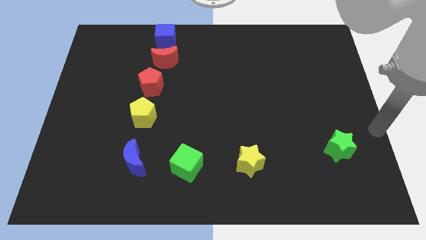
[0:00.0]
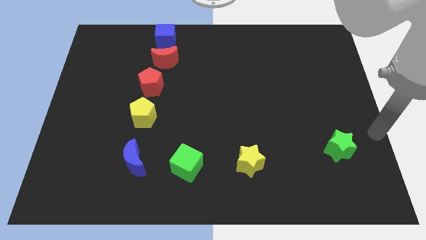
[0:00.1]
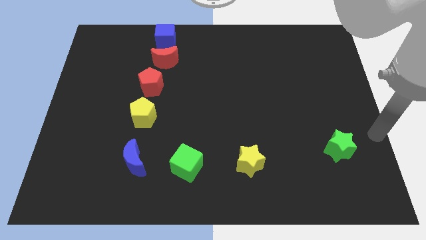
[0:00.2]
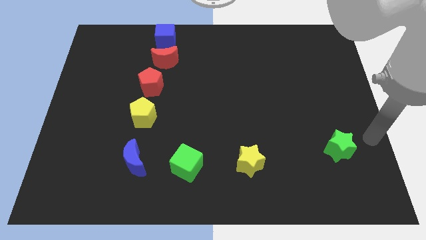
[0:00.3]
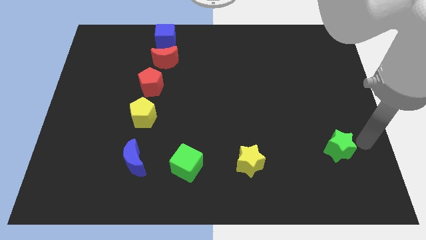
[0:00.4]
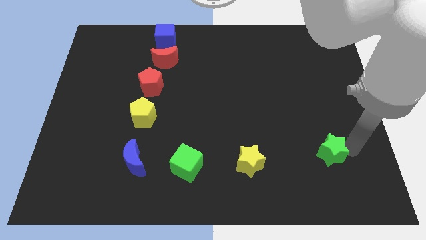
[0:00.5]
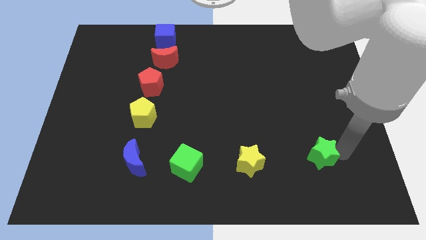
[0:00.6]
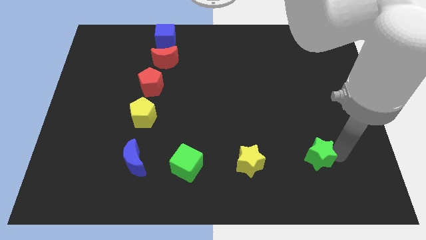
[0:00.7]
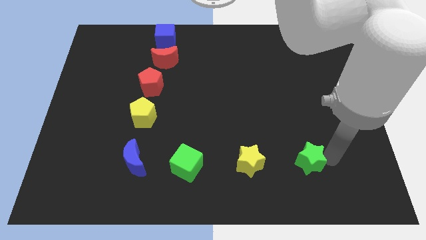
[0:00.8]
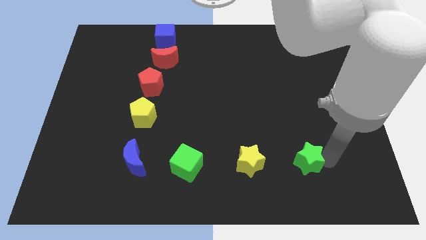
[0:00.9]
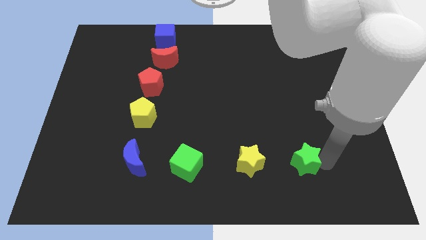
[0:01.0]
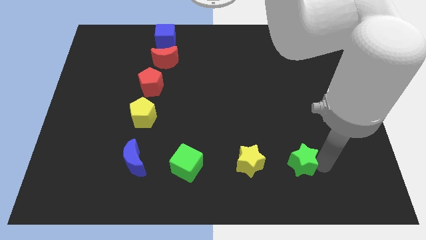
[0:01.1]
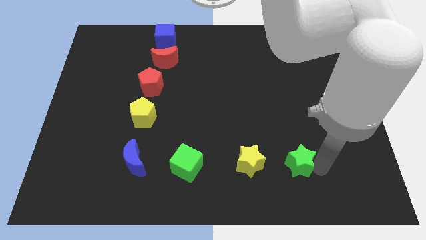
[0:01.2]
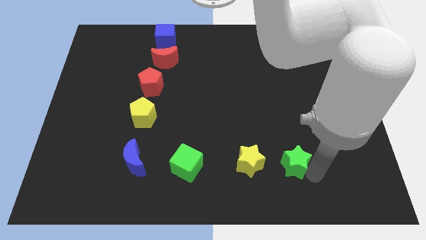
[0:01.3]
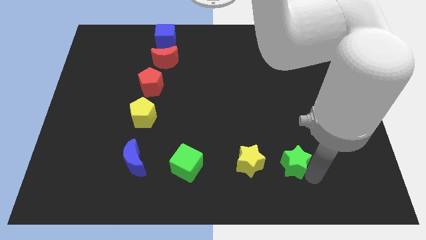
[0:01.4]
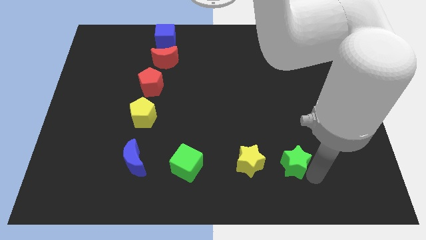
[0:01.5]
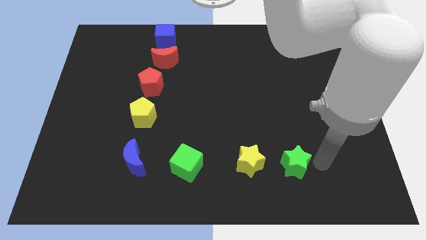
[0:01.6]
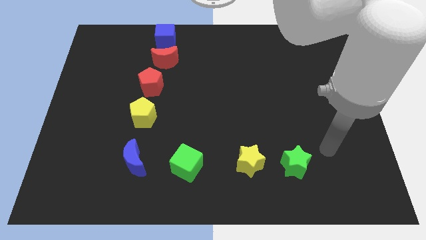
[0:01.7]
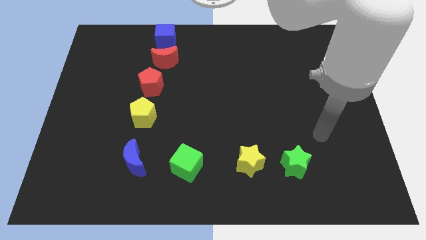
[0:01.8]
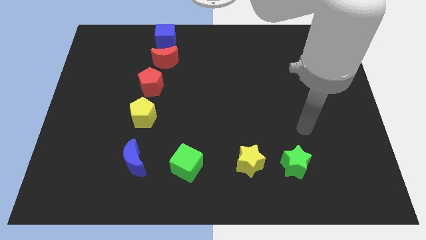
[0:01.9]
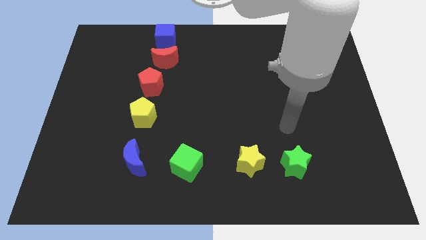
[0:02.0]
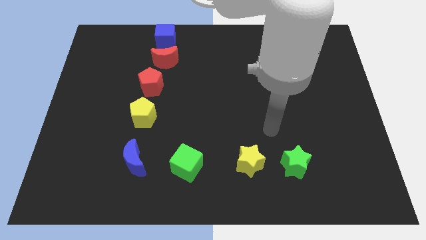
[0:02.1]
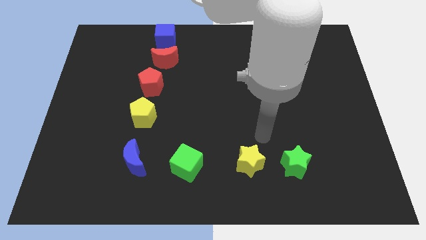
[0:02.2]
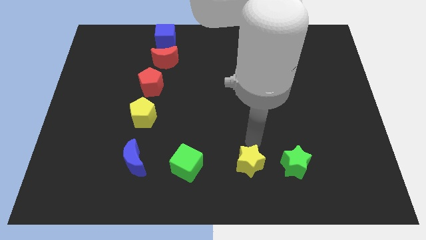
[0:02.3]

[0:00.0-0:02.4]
push the green star to the right side of yellow star

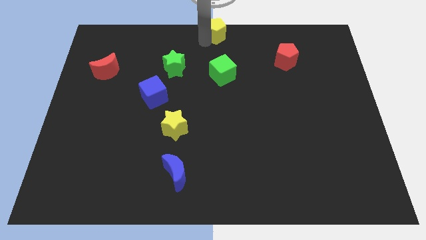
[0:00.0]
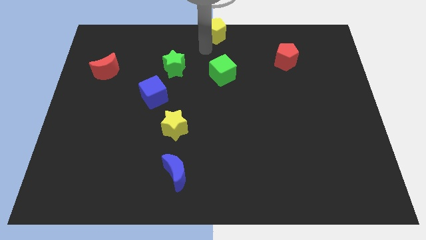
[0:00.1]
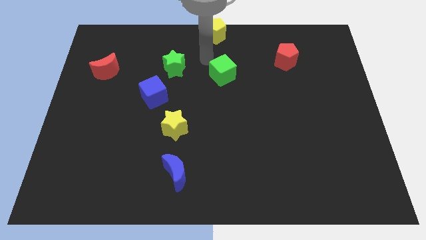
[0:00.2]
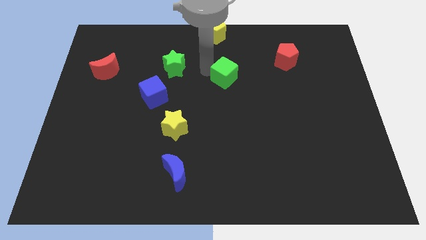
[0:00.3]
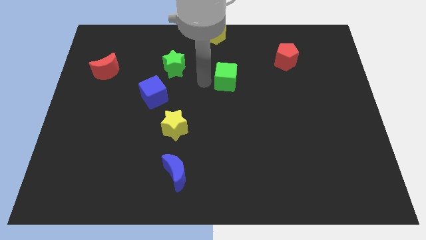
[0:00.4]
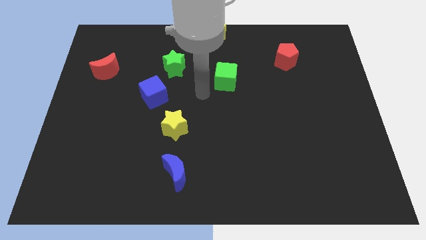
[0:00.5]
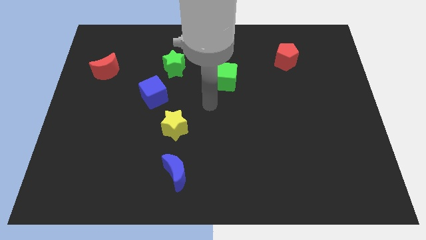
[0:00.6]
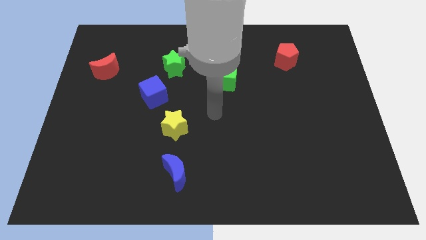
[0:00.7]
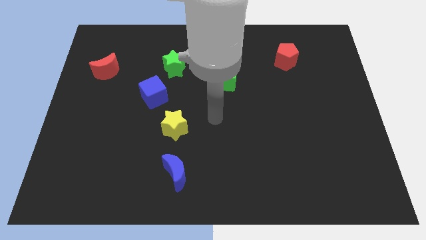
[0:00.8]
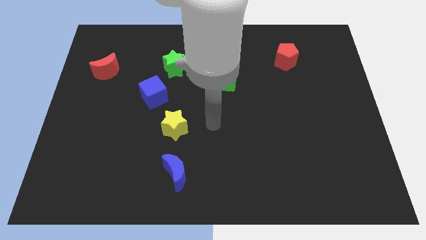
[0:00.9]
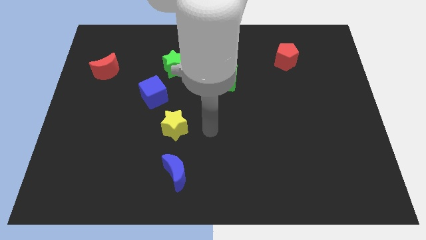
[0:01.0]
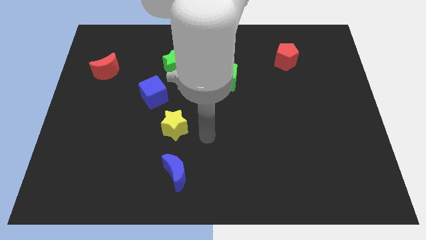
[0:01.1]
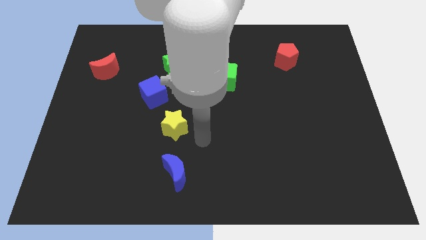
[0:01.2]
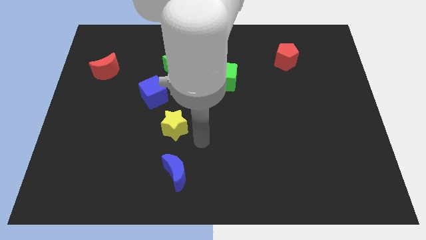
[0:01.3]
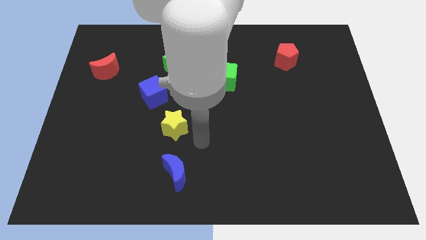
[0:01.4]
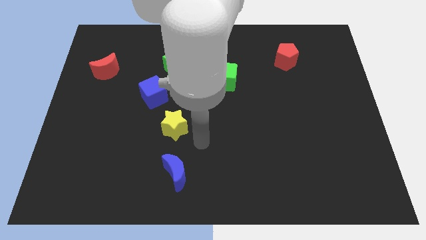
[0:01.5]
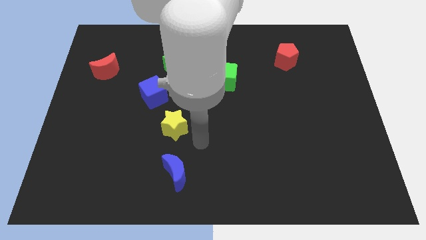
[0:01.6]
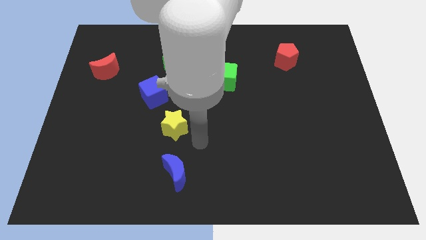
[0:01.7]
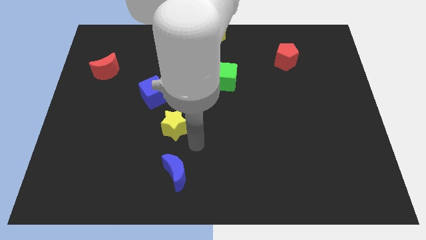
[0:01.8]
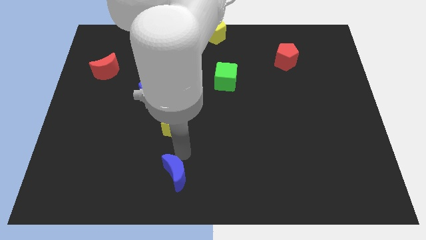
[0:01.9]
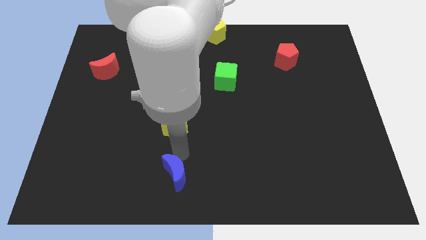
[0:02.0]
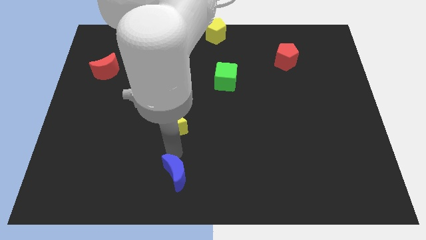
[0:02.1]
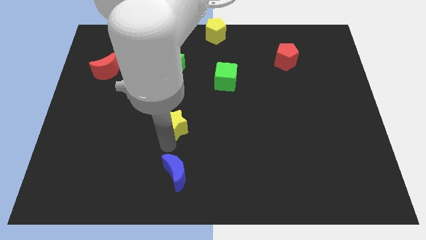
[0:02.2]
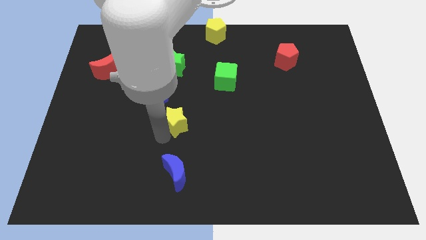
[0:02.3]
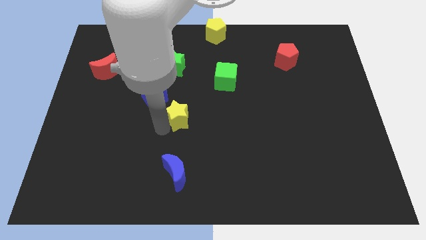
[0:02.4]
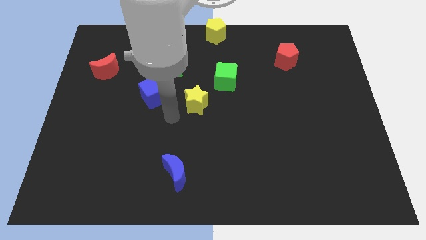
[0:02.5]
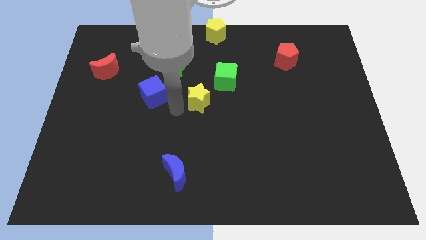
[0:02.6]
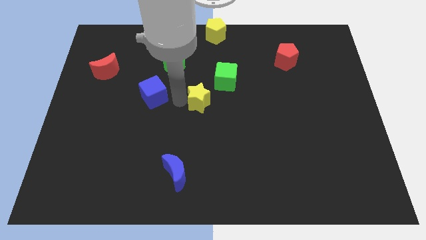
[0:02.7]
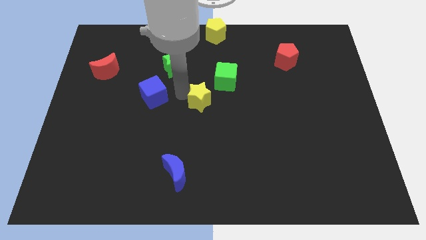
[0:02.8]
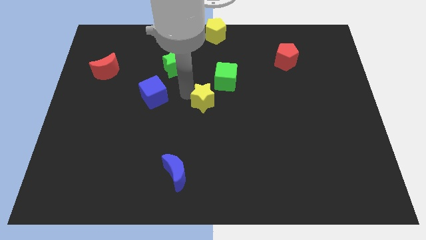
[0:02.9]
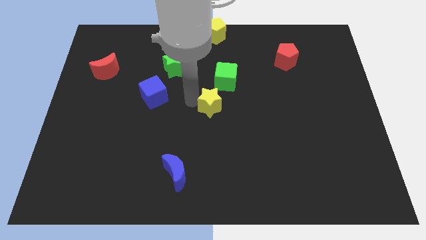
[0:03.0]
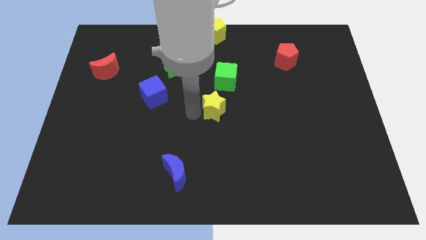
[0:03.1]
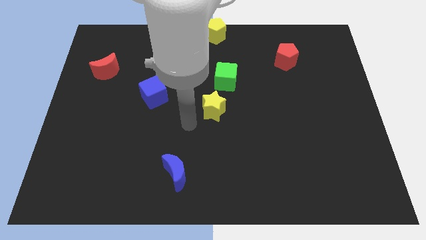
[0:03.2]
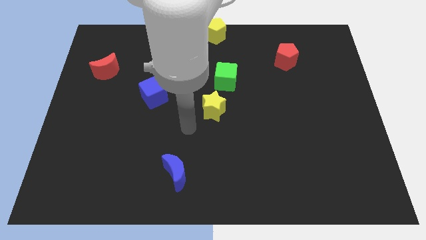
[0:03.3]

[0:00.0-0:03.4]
move the yellow star towards the centre of the board

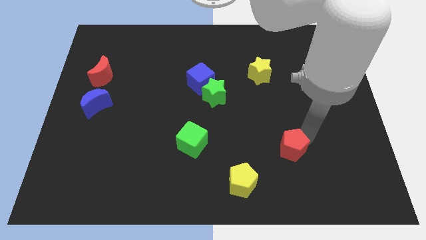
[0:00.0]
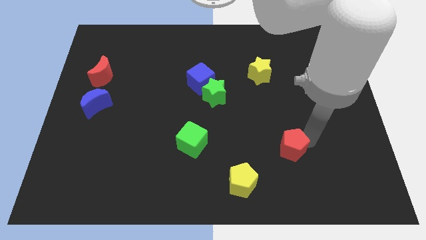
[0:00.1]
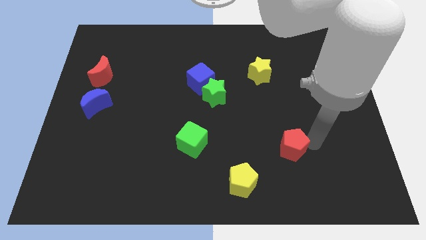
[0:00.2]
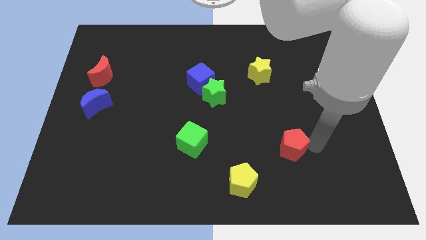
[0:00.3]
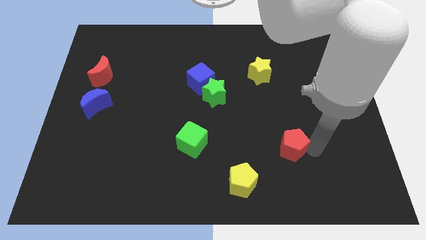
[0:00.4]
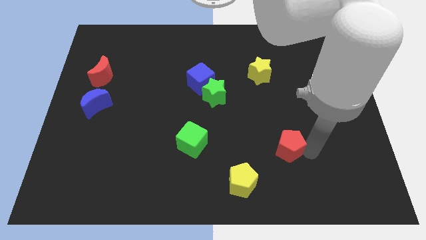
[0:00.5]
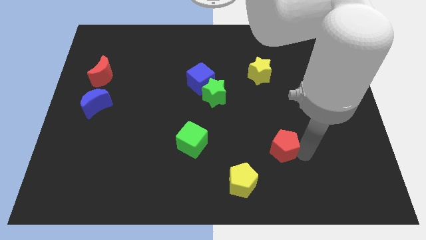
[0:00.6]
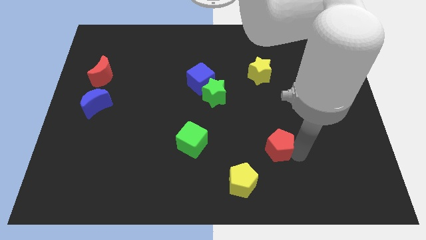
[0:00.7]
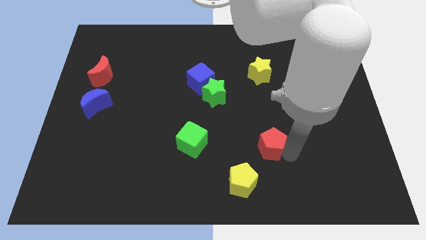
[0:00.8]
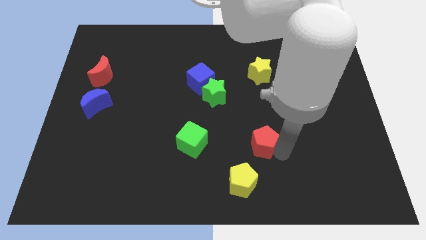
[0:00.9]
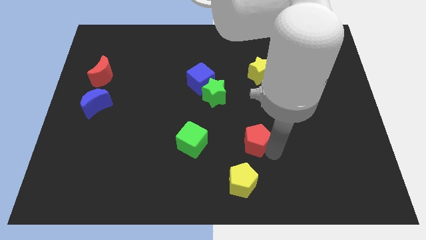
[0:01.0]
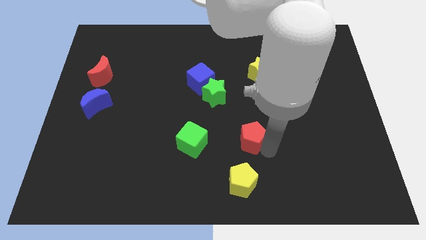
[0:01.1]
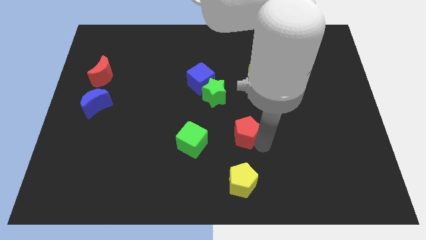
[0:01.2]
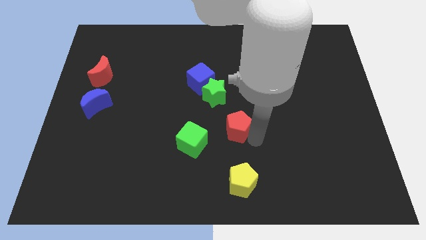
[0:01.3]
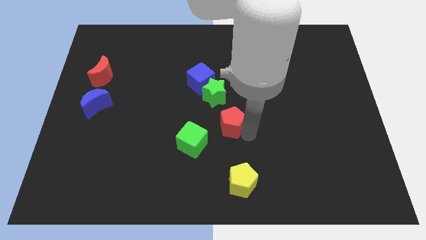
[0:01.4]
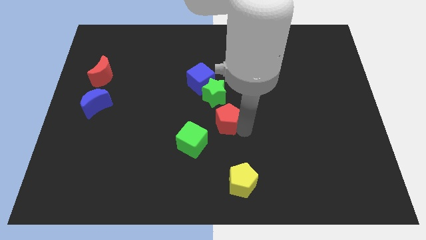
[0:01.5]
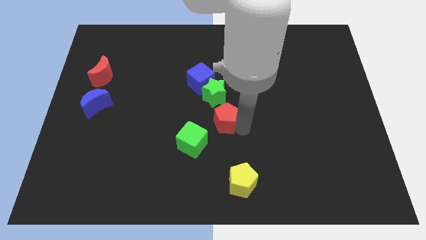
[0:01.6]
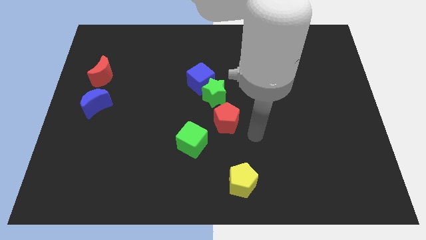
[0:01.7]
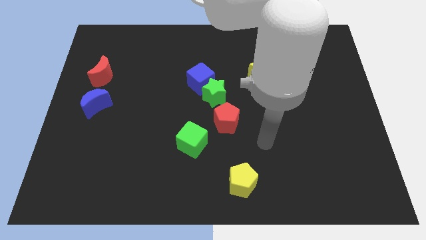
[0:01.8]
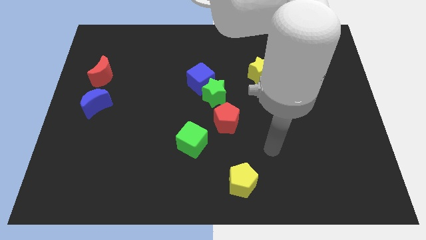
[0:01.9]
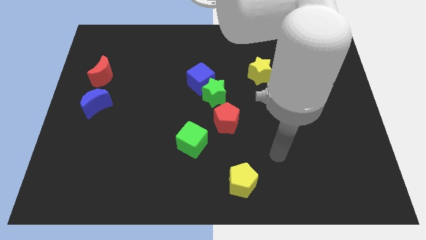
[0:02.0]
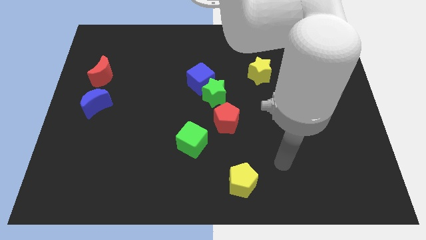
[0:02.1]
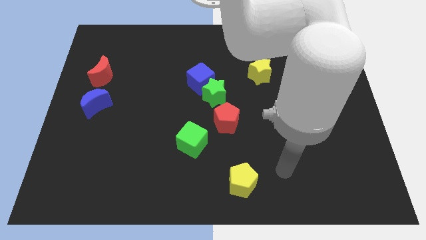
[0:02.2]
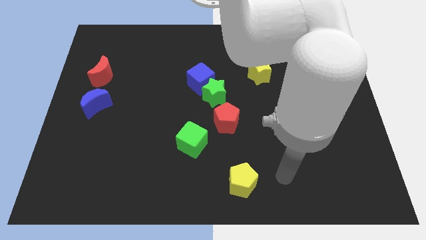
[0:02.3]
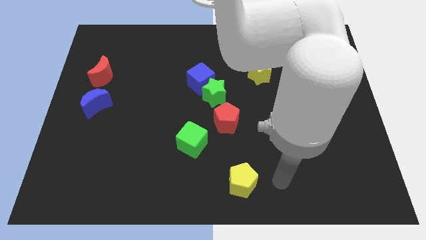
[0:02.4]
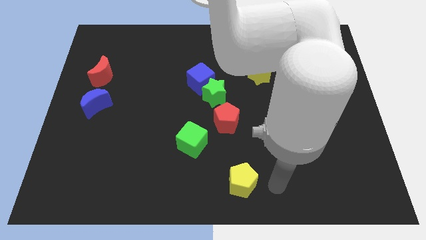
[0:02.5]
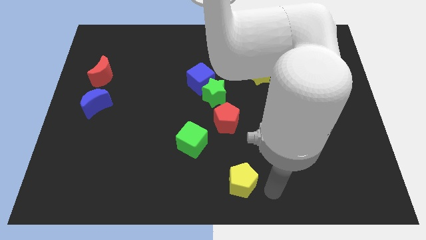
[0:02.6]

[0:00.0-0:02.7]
move red pentagon diagonally below the green star

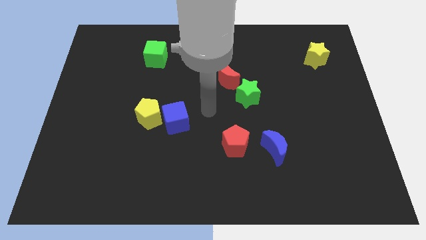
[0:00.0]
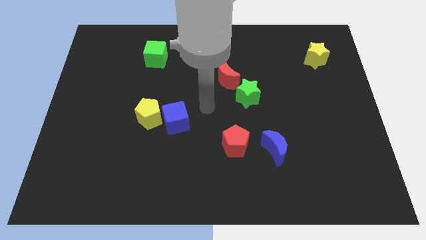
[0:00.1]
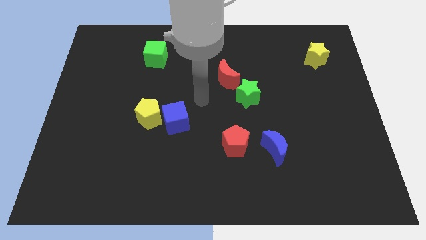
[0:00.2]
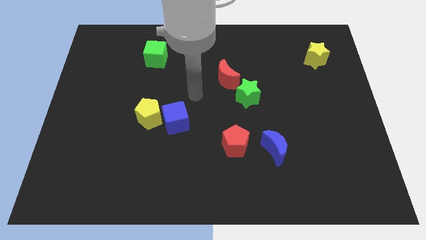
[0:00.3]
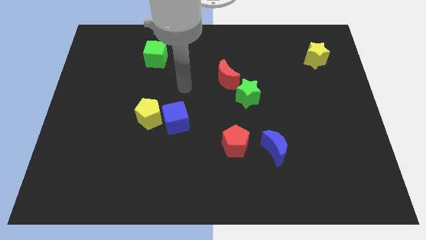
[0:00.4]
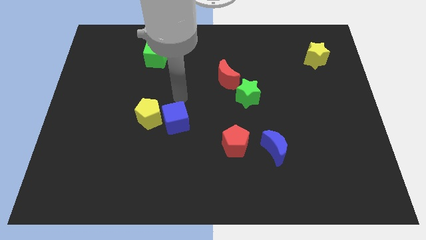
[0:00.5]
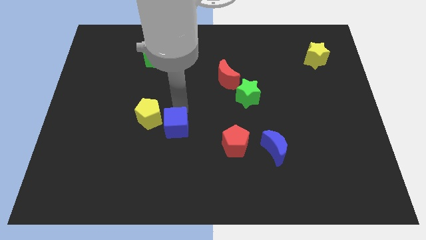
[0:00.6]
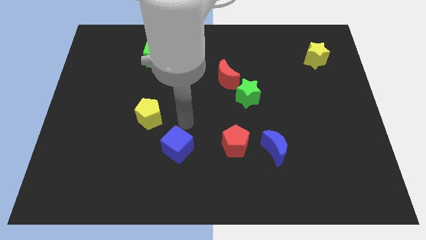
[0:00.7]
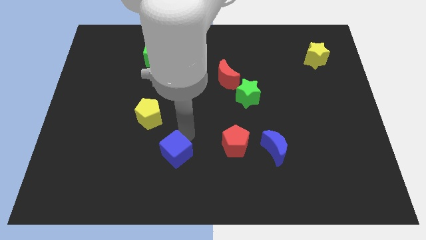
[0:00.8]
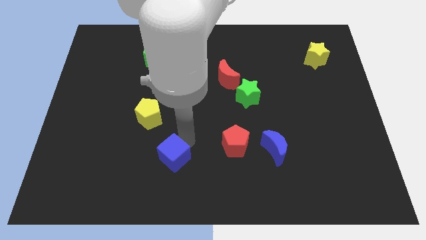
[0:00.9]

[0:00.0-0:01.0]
separate blue cube from yellow pentagon
